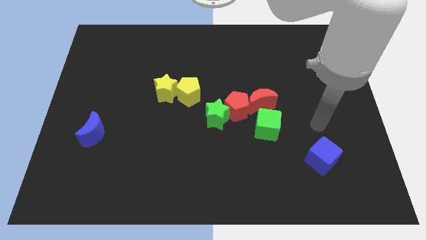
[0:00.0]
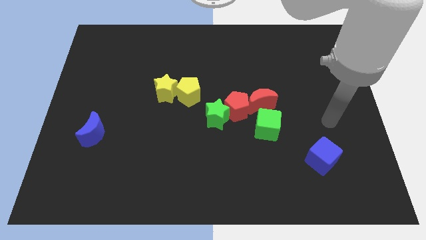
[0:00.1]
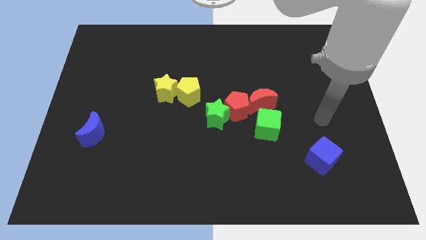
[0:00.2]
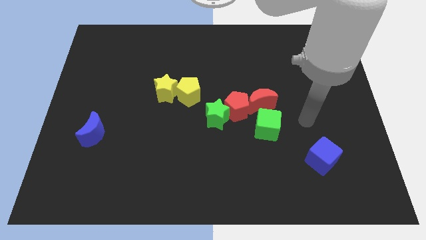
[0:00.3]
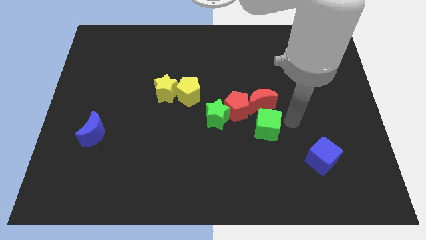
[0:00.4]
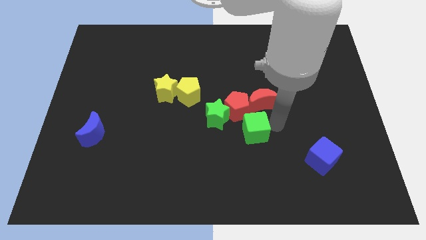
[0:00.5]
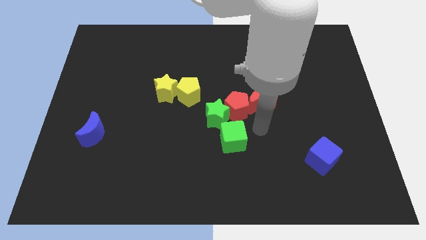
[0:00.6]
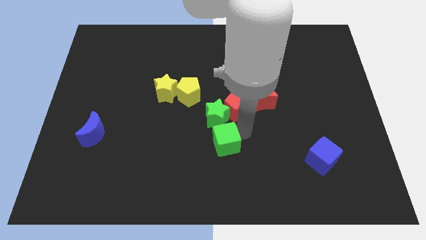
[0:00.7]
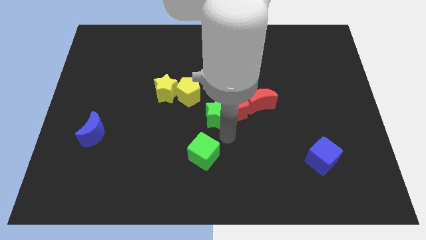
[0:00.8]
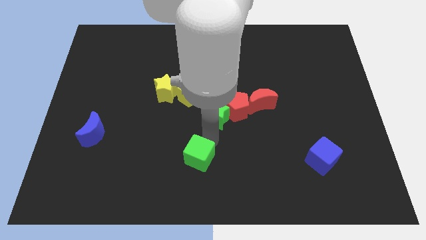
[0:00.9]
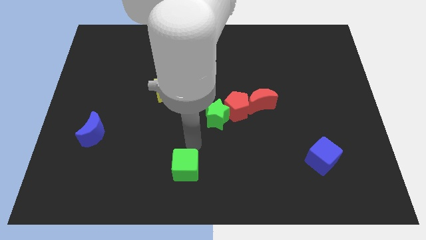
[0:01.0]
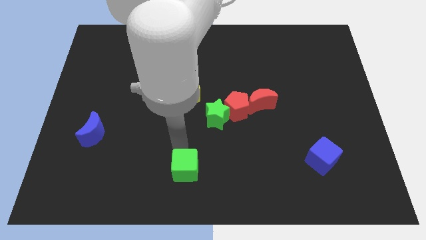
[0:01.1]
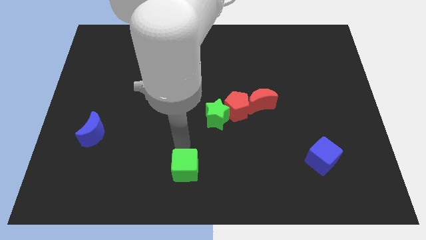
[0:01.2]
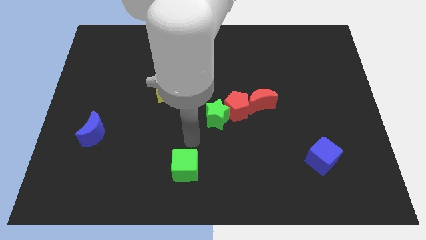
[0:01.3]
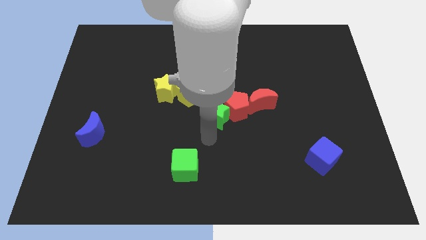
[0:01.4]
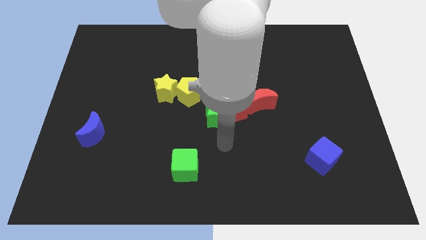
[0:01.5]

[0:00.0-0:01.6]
move the green cube to the bottom center of the board

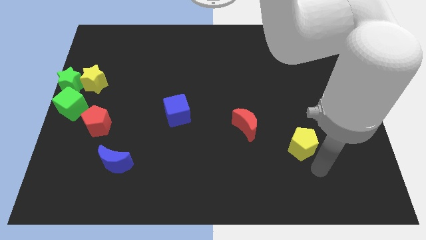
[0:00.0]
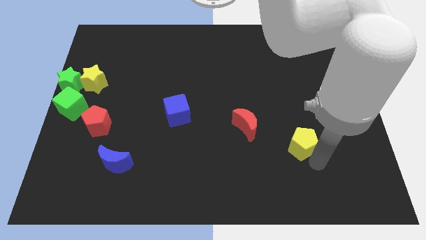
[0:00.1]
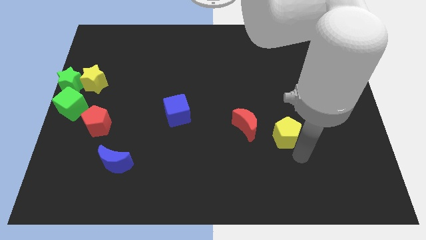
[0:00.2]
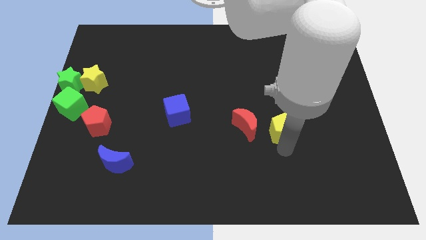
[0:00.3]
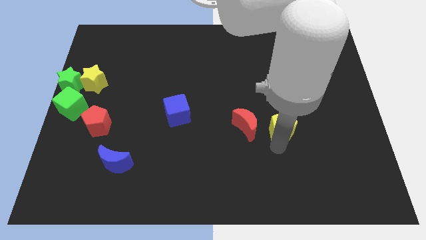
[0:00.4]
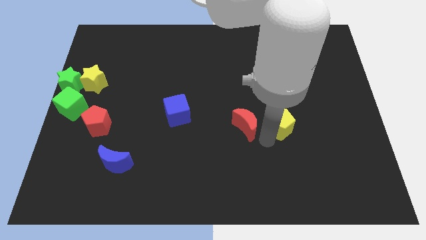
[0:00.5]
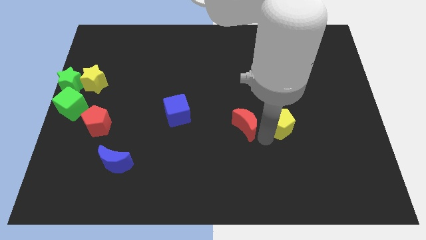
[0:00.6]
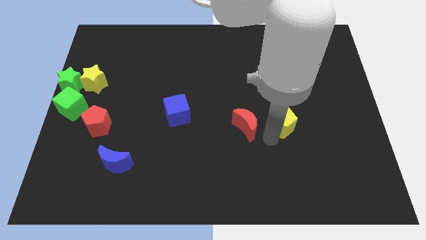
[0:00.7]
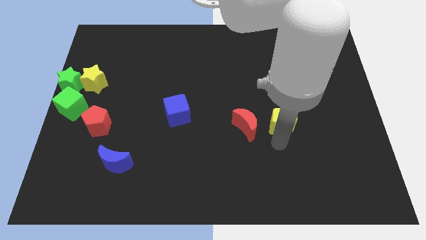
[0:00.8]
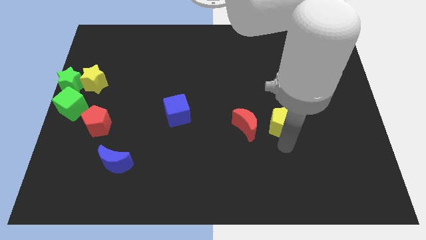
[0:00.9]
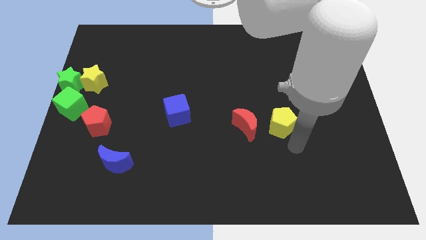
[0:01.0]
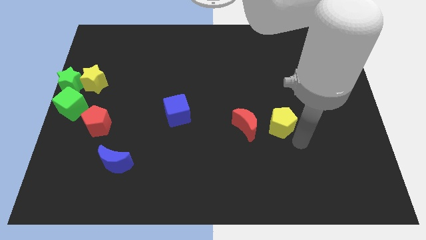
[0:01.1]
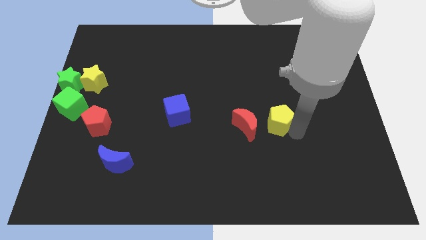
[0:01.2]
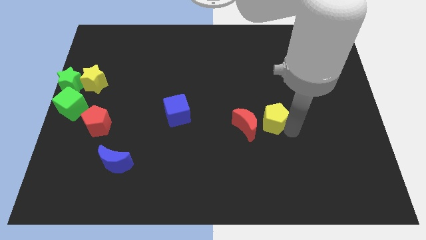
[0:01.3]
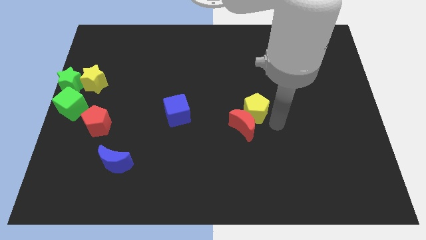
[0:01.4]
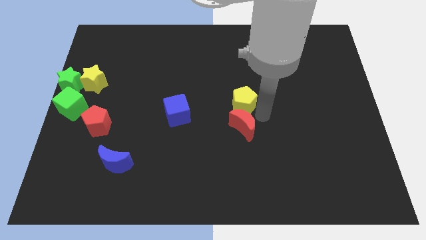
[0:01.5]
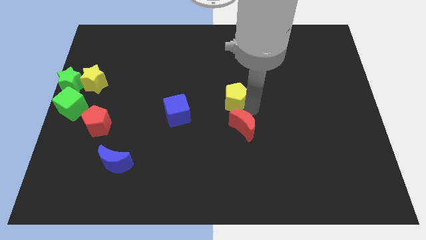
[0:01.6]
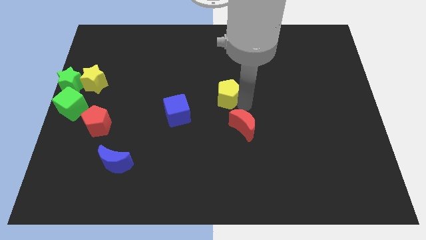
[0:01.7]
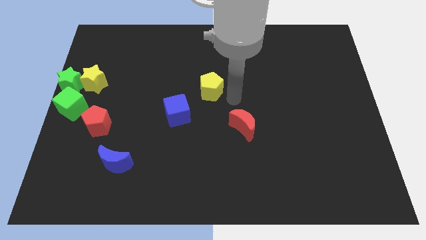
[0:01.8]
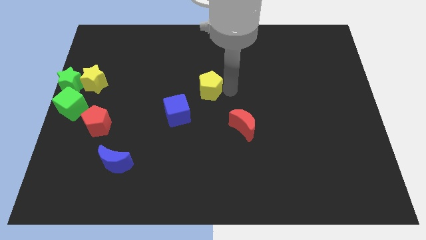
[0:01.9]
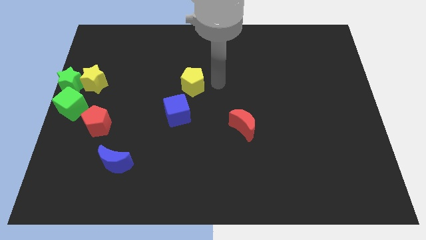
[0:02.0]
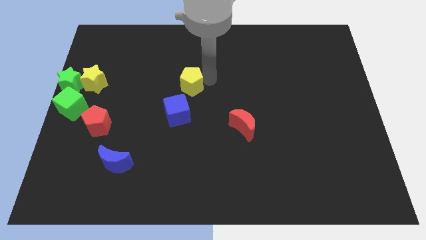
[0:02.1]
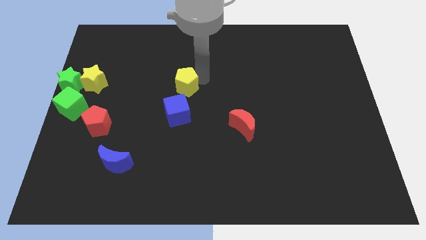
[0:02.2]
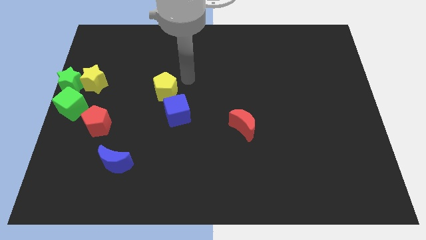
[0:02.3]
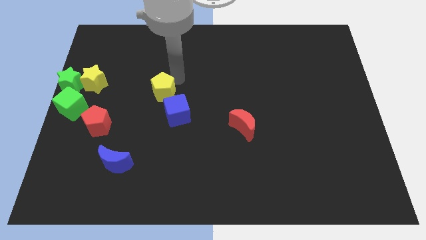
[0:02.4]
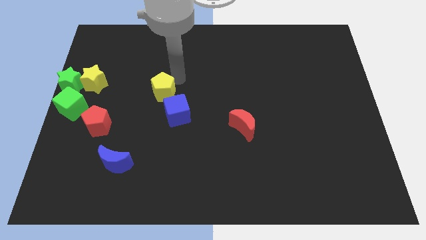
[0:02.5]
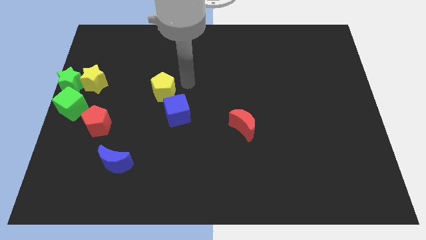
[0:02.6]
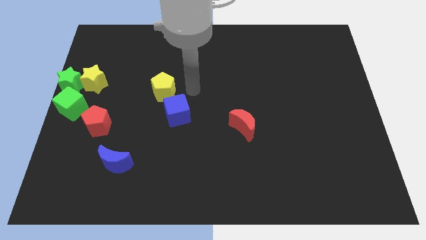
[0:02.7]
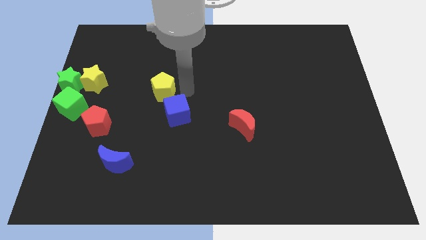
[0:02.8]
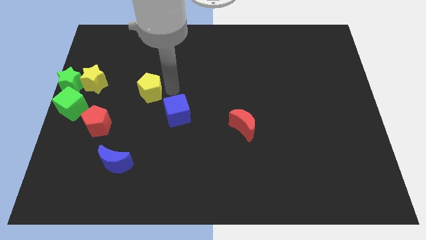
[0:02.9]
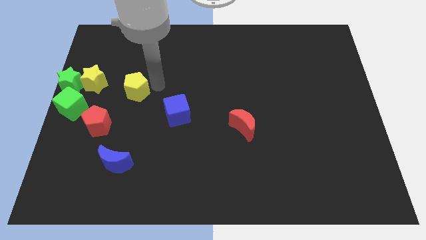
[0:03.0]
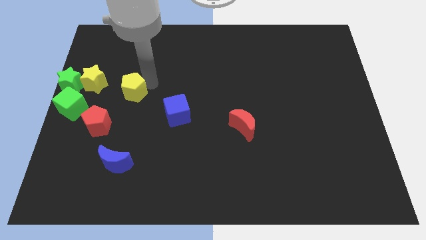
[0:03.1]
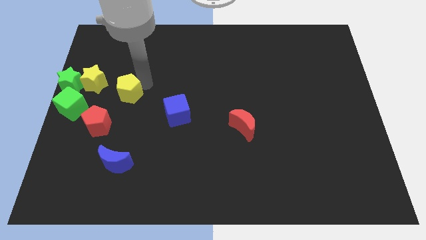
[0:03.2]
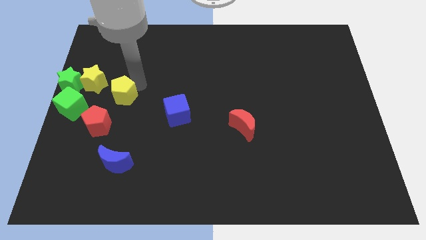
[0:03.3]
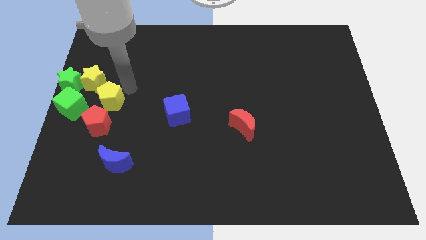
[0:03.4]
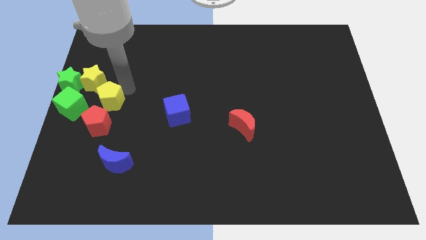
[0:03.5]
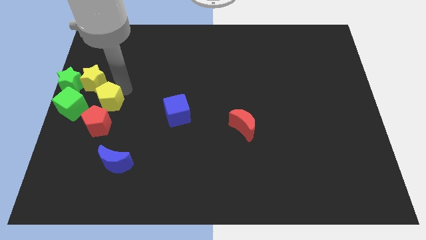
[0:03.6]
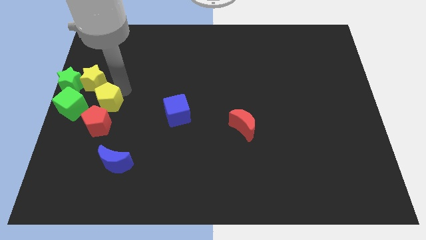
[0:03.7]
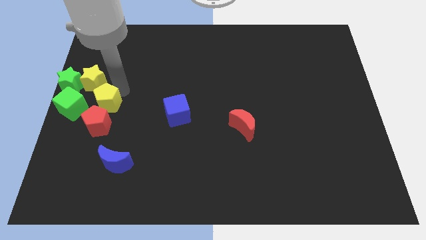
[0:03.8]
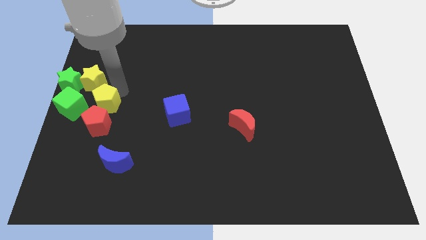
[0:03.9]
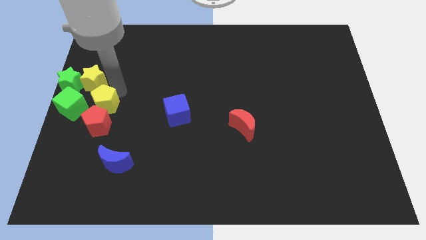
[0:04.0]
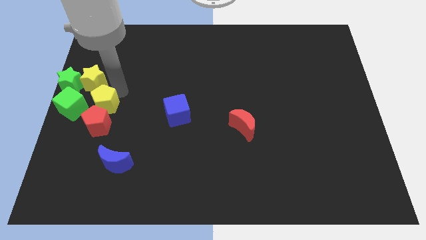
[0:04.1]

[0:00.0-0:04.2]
move the yellow pentagon above the red pentagon

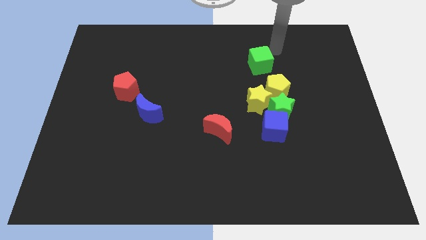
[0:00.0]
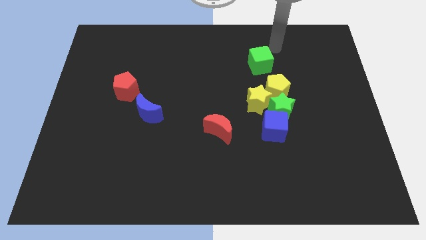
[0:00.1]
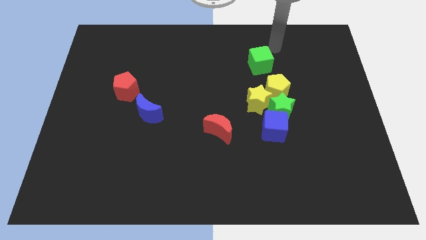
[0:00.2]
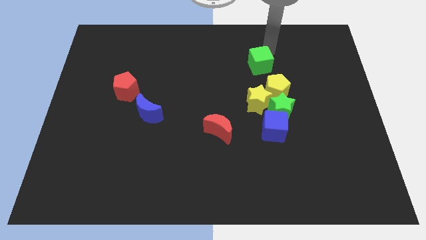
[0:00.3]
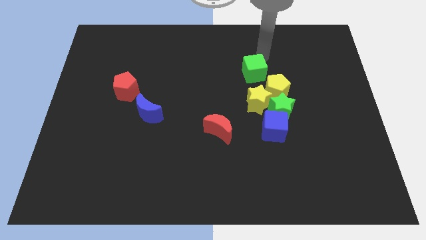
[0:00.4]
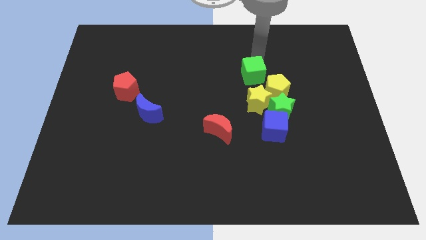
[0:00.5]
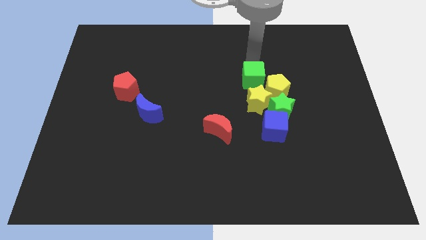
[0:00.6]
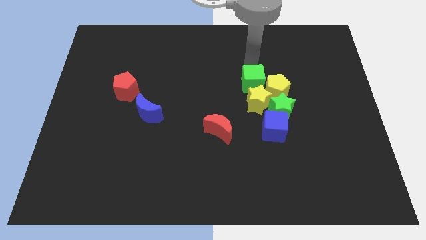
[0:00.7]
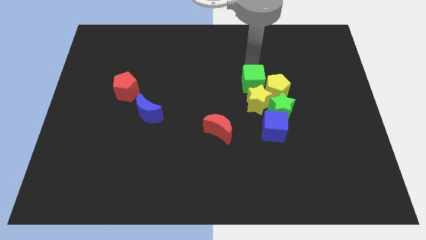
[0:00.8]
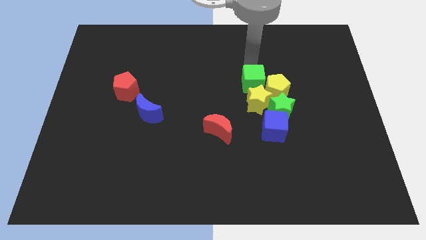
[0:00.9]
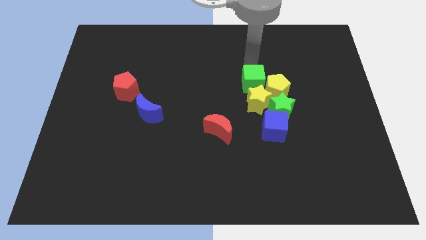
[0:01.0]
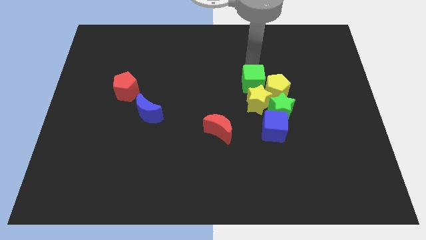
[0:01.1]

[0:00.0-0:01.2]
move green cube above yellow star

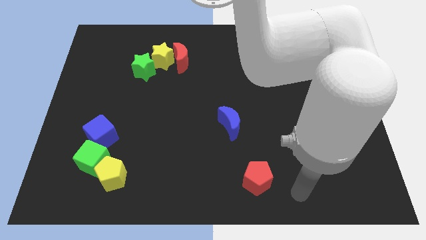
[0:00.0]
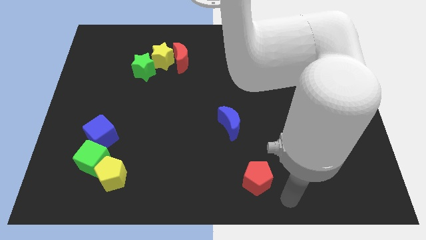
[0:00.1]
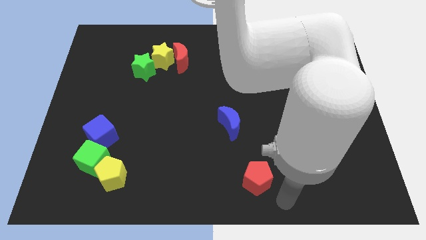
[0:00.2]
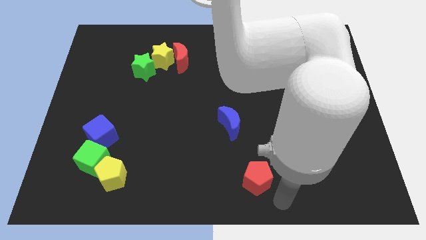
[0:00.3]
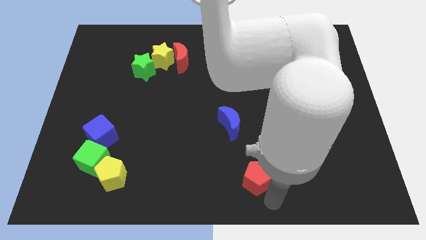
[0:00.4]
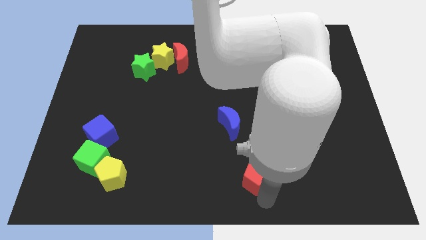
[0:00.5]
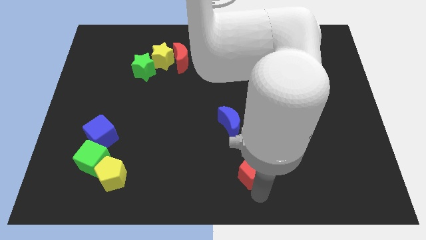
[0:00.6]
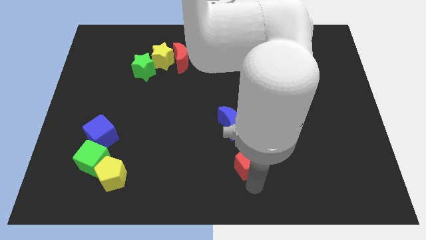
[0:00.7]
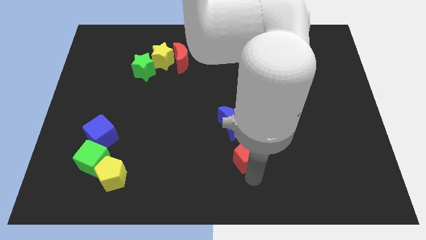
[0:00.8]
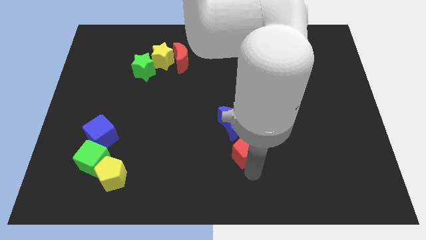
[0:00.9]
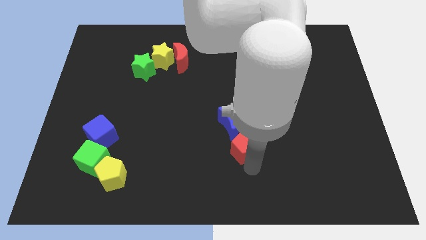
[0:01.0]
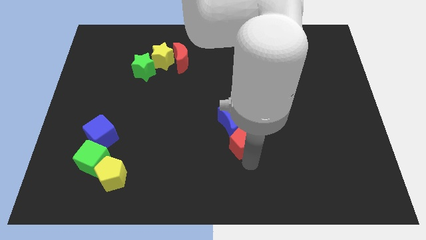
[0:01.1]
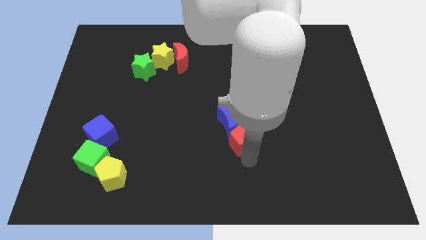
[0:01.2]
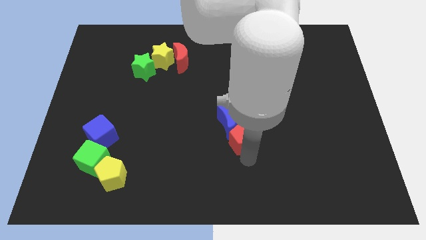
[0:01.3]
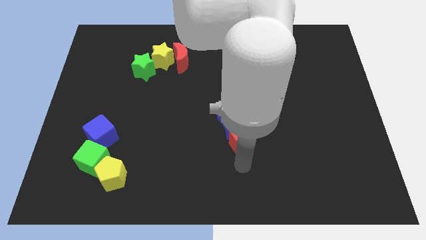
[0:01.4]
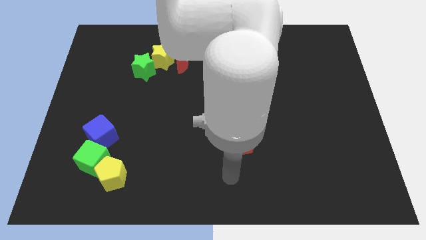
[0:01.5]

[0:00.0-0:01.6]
push the red pentagon into the blue moon

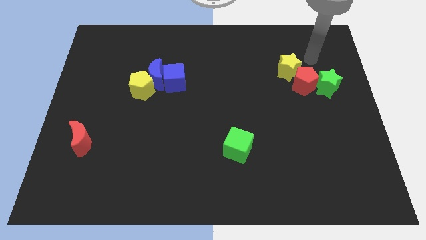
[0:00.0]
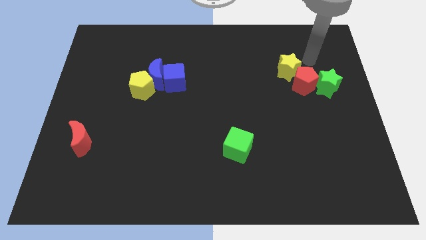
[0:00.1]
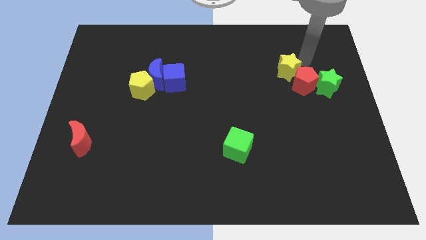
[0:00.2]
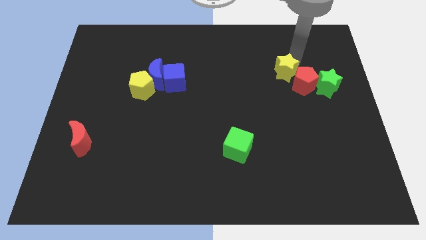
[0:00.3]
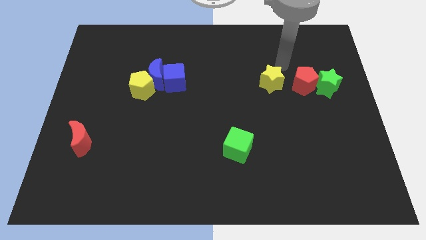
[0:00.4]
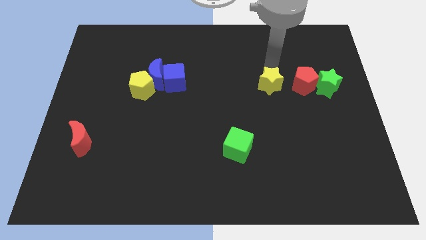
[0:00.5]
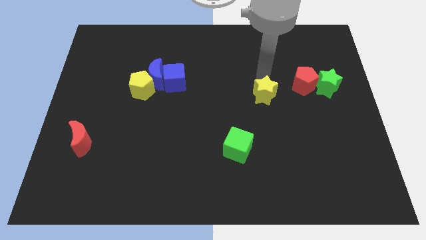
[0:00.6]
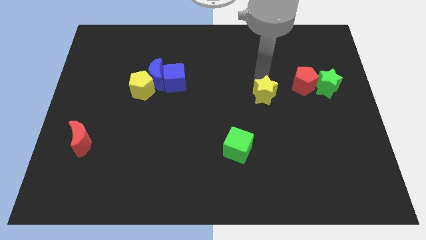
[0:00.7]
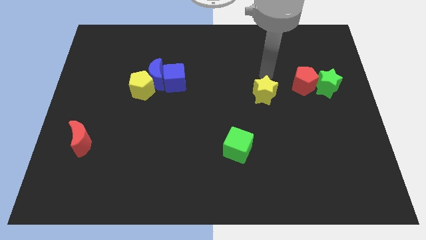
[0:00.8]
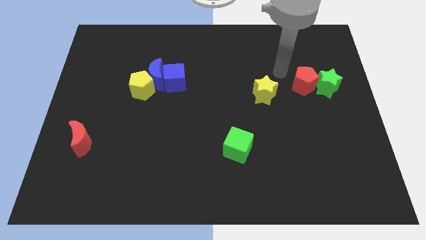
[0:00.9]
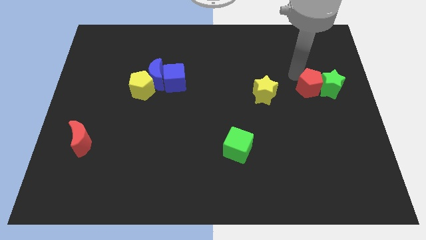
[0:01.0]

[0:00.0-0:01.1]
slightly push the yellow star diagonal to the green cube
